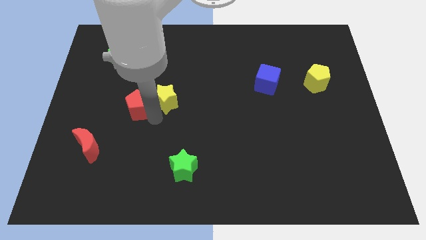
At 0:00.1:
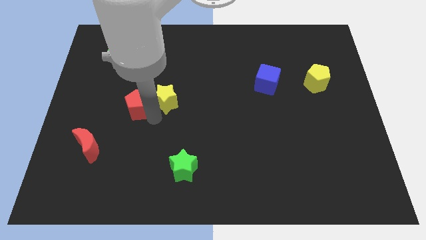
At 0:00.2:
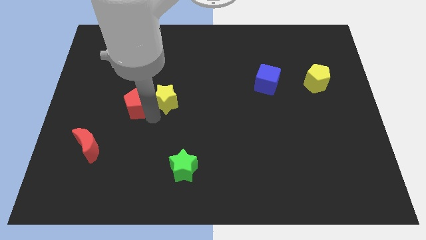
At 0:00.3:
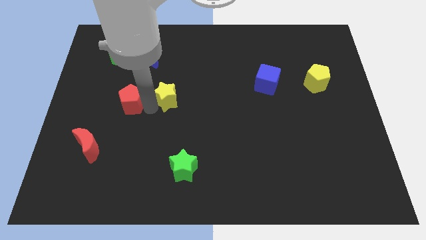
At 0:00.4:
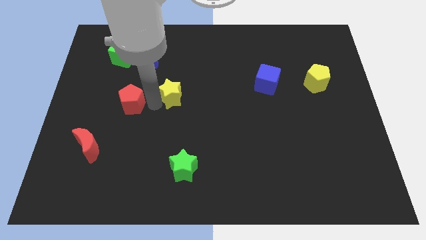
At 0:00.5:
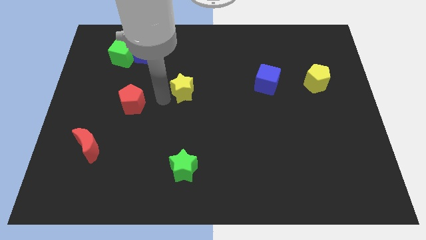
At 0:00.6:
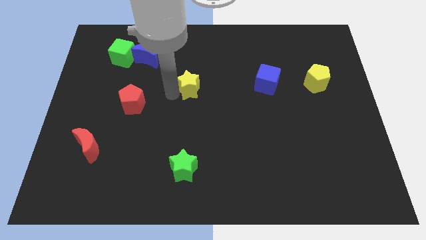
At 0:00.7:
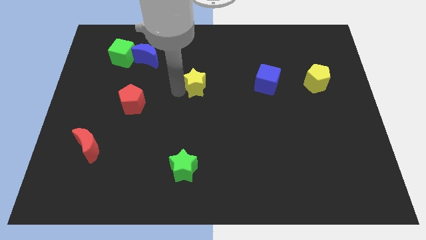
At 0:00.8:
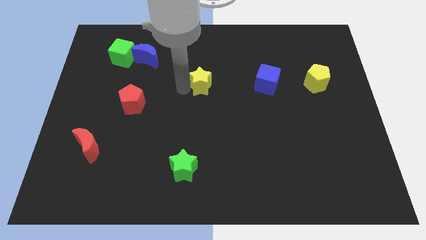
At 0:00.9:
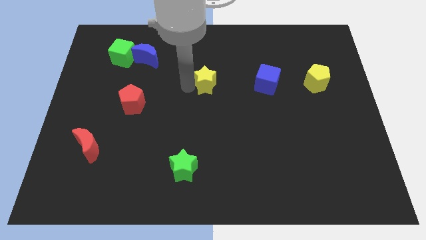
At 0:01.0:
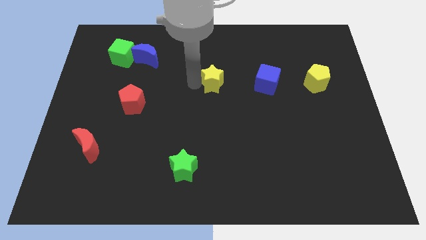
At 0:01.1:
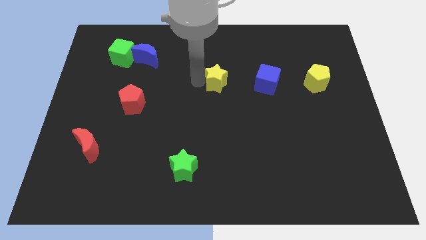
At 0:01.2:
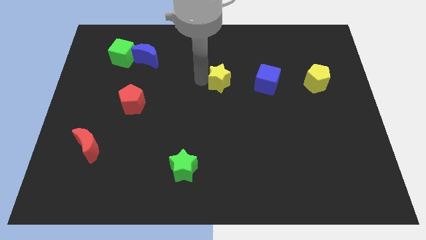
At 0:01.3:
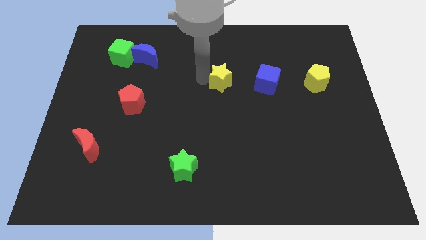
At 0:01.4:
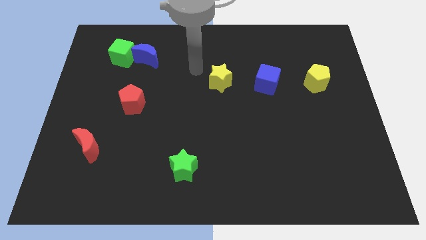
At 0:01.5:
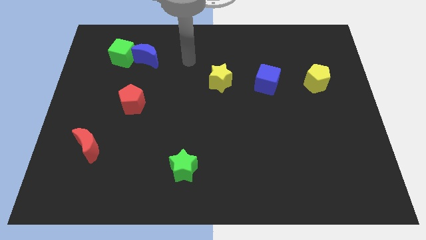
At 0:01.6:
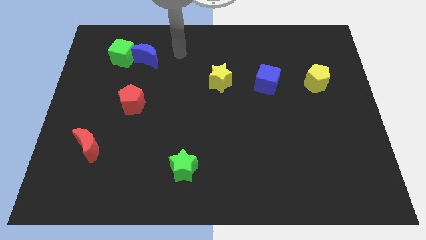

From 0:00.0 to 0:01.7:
separate yellow star from the red pentagon

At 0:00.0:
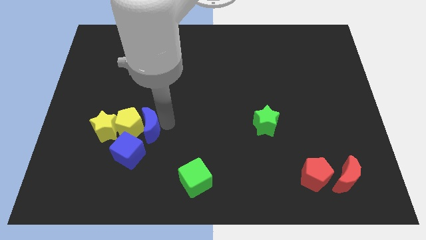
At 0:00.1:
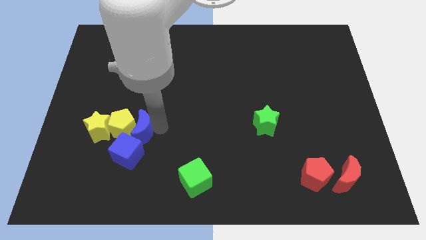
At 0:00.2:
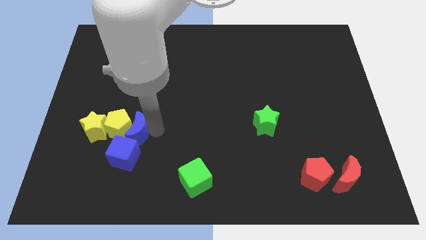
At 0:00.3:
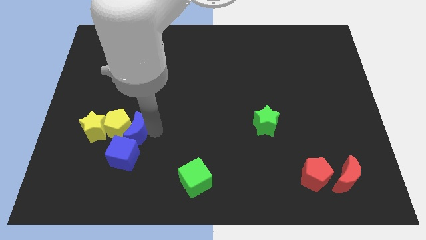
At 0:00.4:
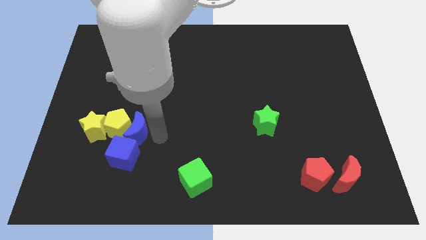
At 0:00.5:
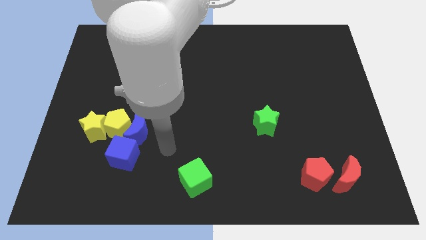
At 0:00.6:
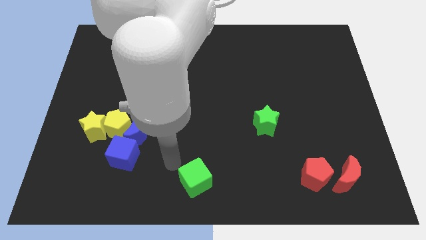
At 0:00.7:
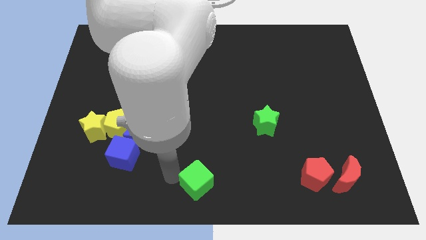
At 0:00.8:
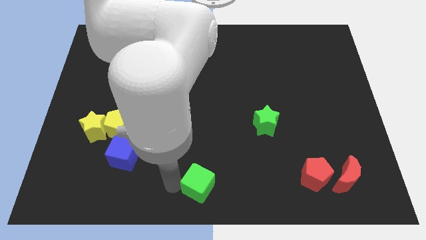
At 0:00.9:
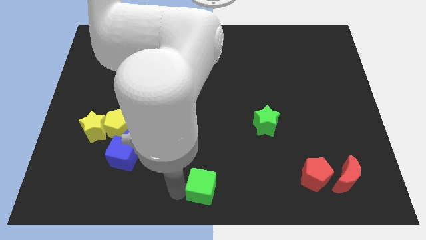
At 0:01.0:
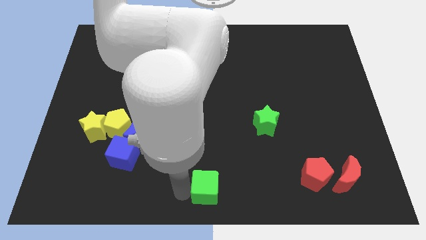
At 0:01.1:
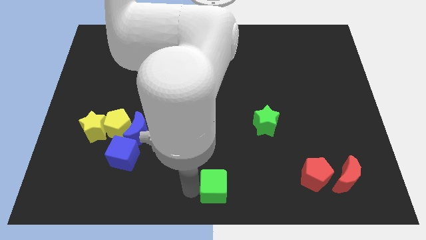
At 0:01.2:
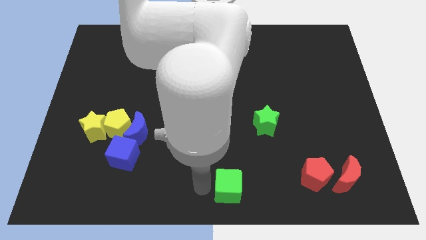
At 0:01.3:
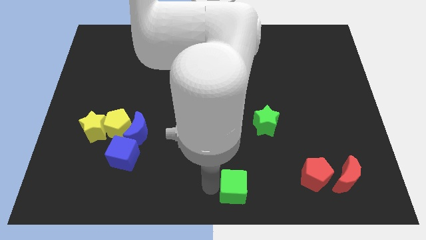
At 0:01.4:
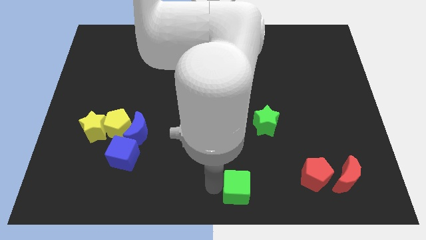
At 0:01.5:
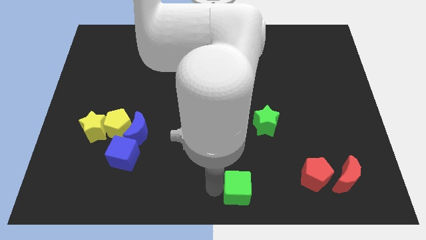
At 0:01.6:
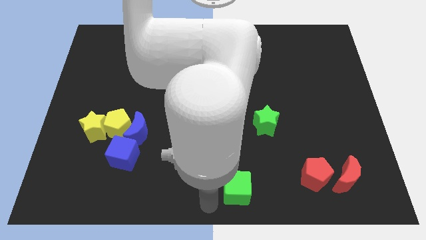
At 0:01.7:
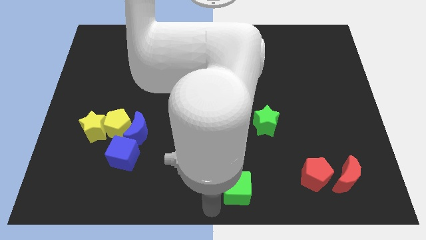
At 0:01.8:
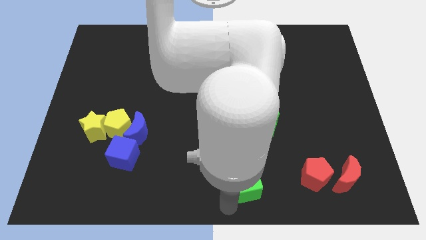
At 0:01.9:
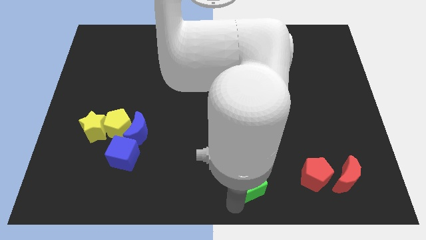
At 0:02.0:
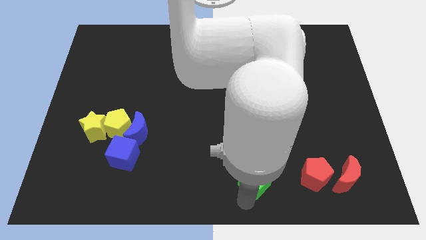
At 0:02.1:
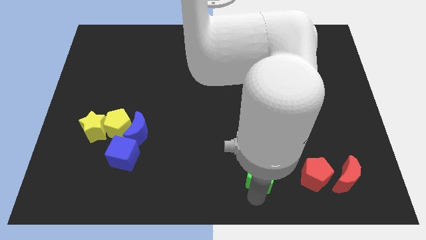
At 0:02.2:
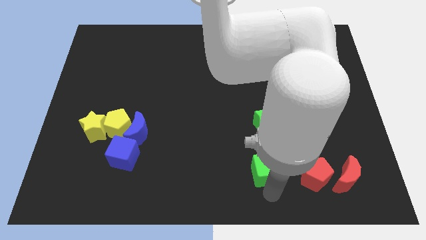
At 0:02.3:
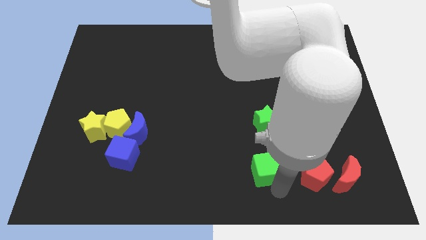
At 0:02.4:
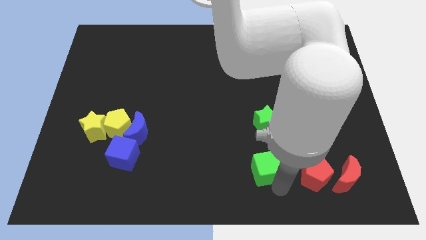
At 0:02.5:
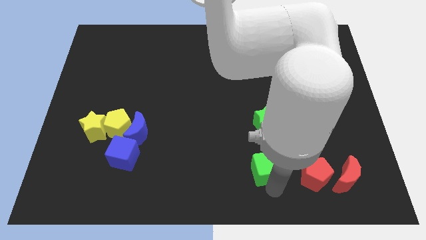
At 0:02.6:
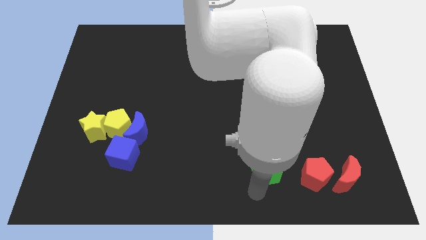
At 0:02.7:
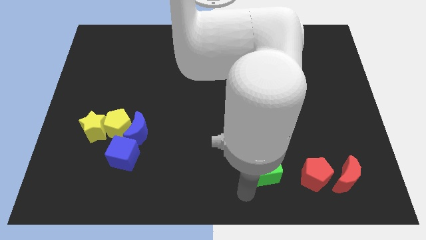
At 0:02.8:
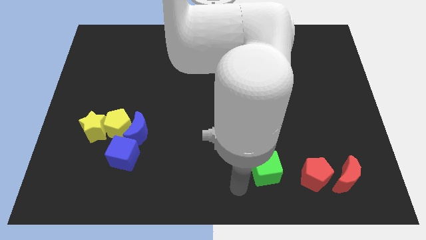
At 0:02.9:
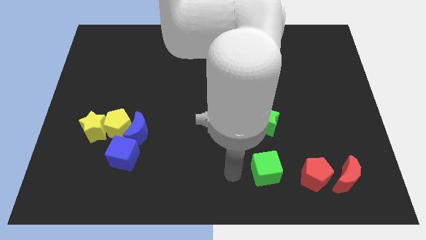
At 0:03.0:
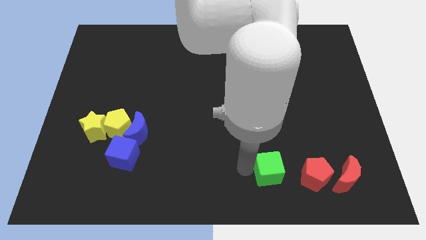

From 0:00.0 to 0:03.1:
place the green cube below the green star

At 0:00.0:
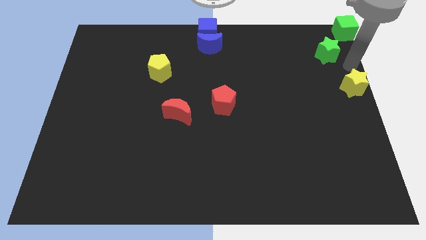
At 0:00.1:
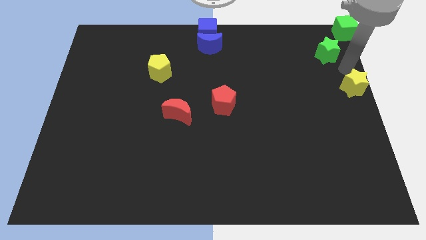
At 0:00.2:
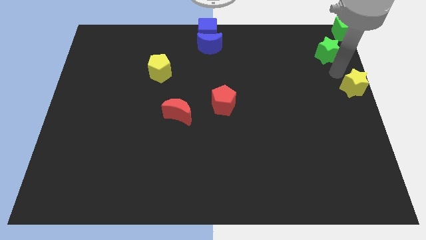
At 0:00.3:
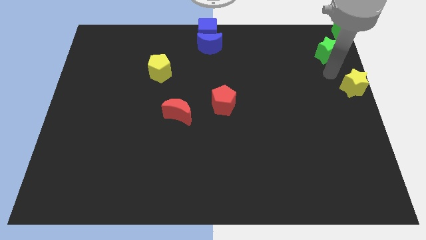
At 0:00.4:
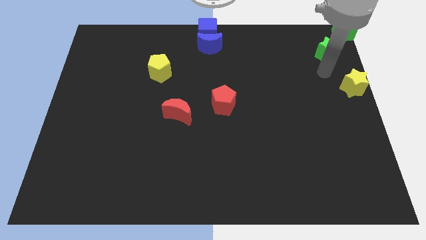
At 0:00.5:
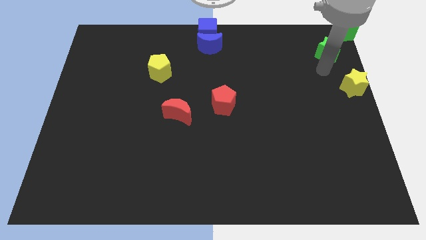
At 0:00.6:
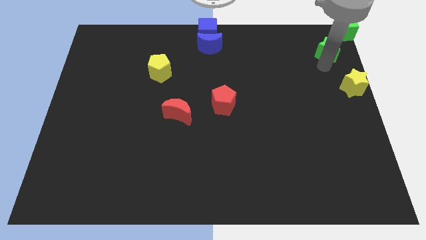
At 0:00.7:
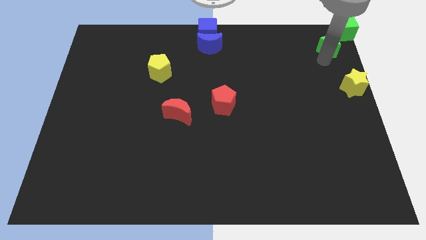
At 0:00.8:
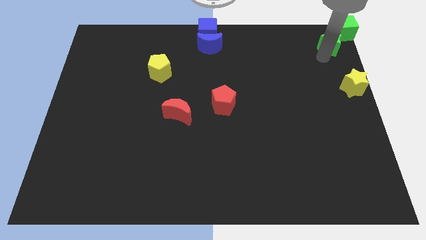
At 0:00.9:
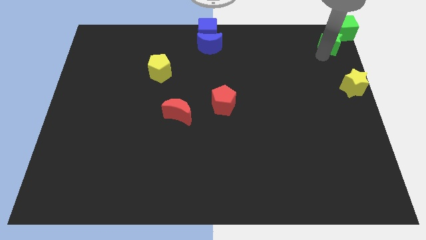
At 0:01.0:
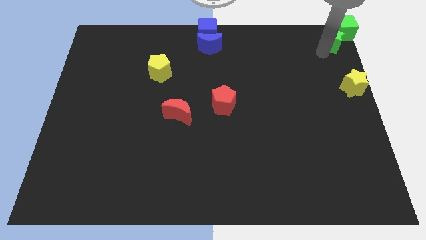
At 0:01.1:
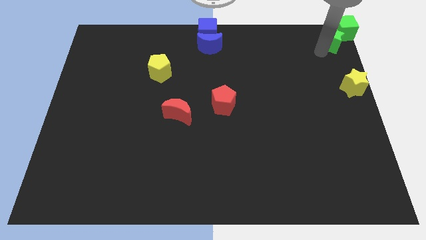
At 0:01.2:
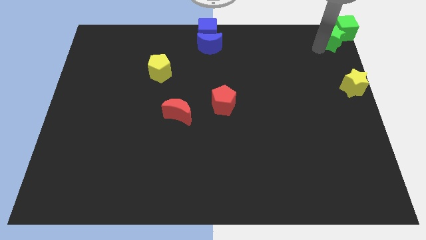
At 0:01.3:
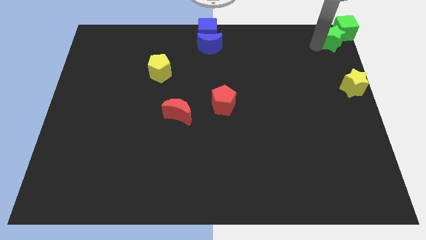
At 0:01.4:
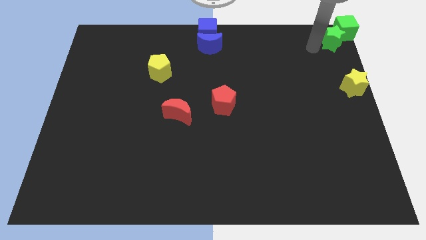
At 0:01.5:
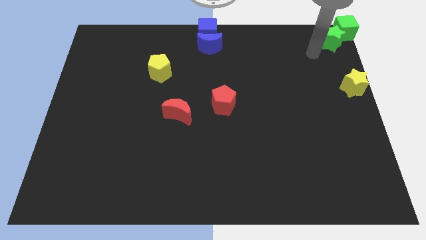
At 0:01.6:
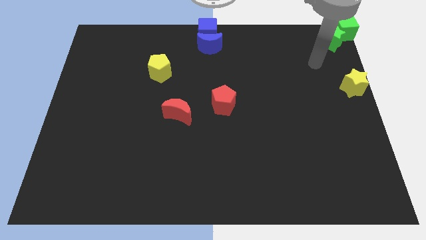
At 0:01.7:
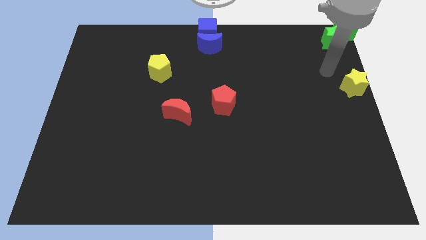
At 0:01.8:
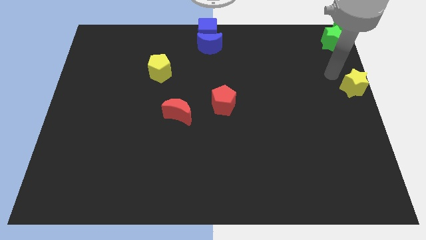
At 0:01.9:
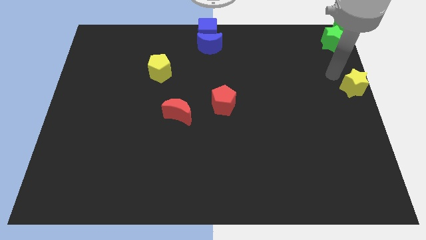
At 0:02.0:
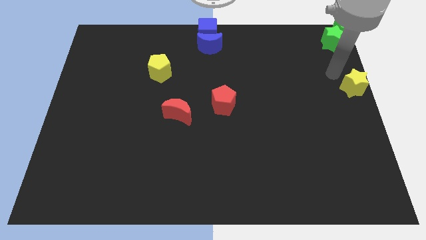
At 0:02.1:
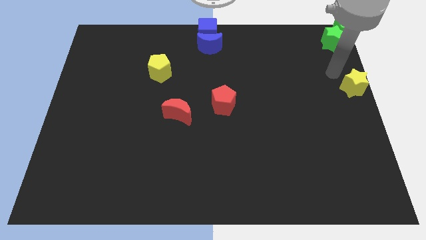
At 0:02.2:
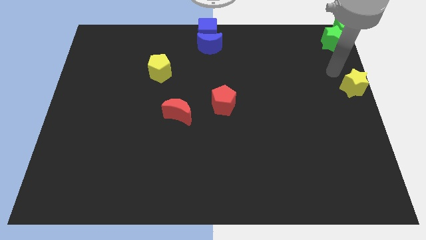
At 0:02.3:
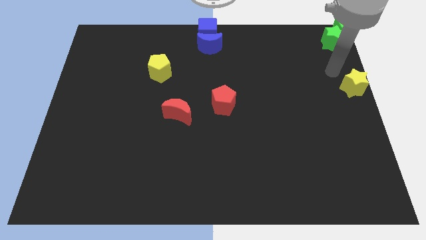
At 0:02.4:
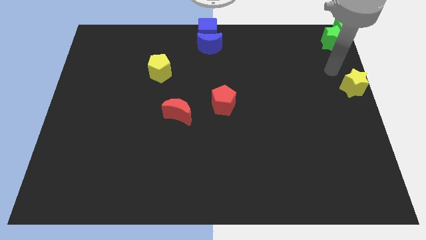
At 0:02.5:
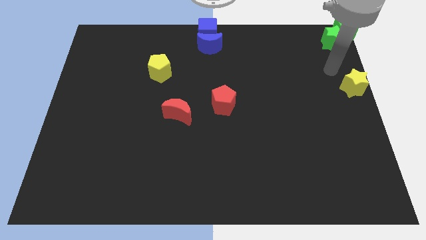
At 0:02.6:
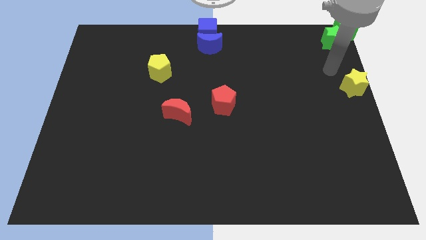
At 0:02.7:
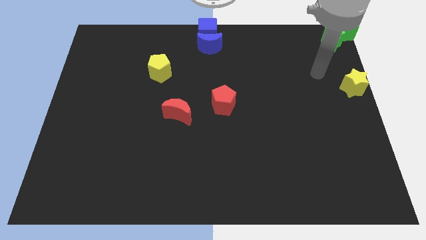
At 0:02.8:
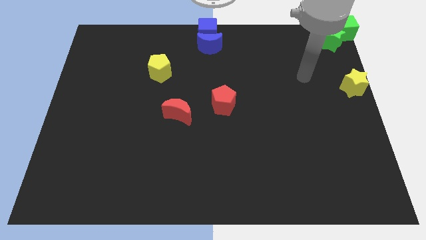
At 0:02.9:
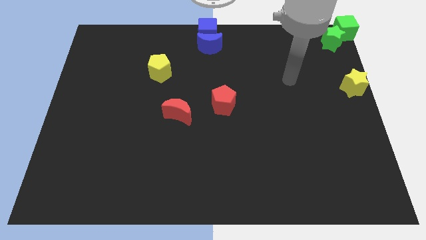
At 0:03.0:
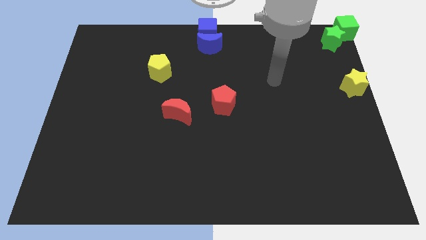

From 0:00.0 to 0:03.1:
push the green star to the top right corner to the board

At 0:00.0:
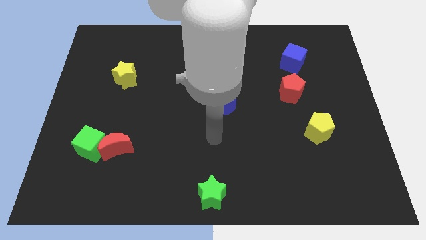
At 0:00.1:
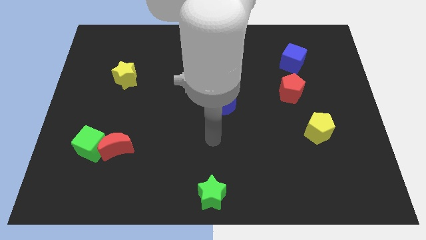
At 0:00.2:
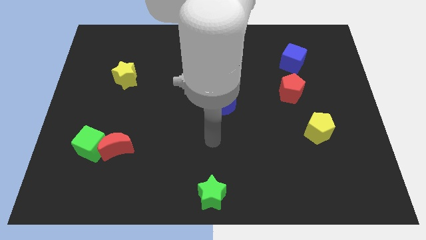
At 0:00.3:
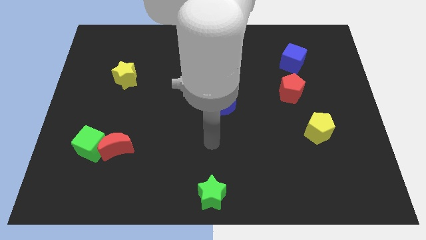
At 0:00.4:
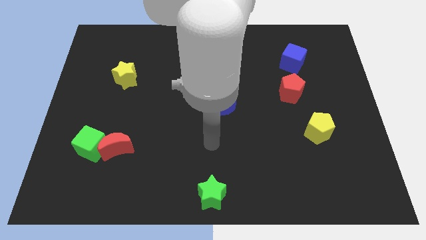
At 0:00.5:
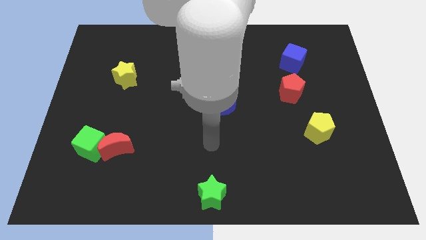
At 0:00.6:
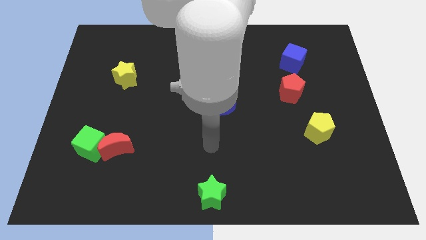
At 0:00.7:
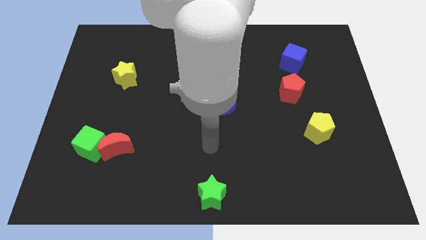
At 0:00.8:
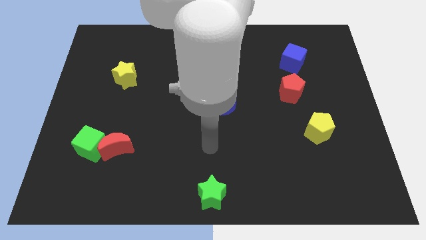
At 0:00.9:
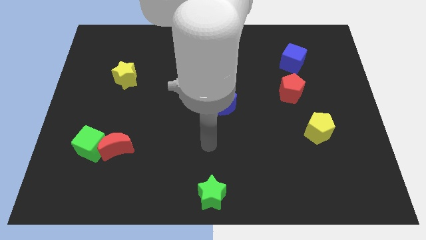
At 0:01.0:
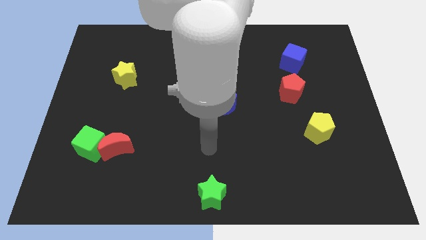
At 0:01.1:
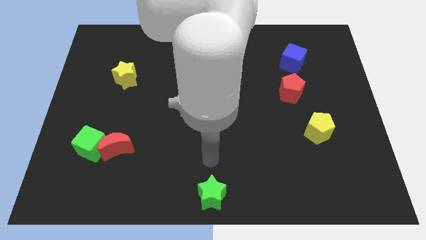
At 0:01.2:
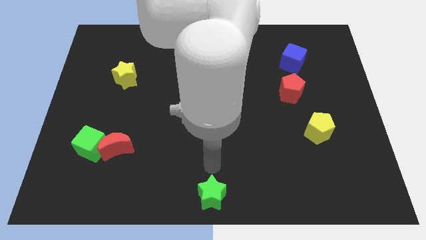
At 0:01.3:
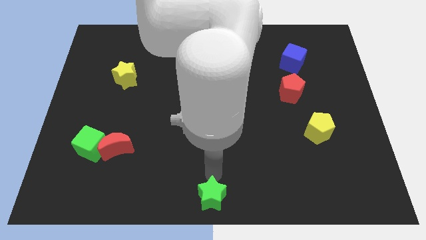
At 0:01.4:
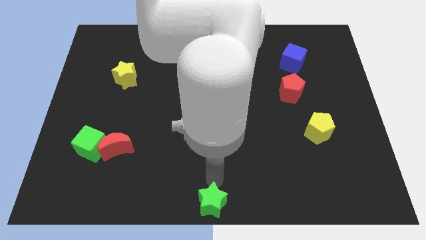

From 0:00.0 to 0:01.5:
place the green star at the bottom center of the board
